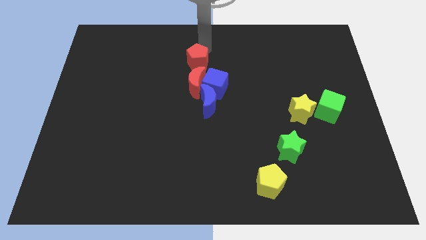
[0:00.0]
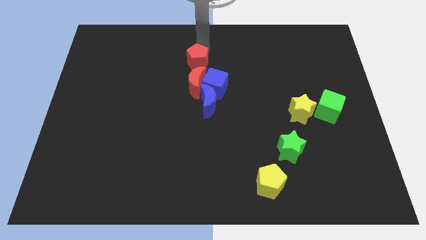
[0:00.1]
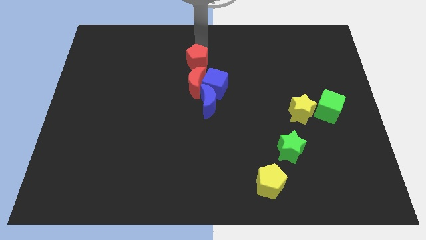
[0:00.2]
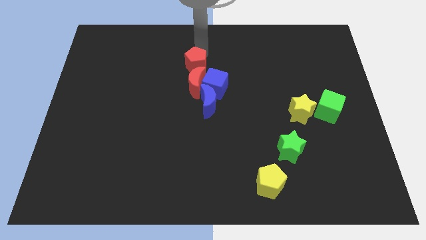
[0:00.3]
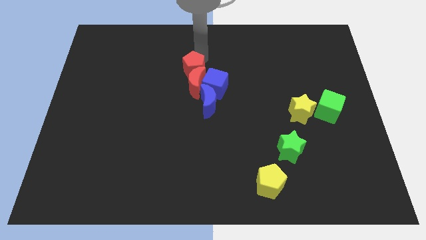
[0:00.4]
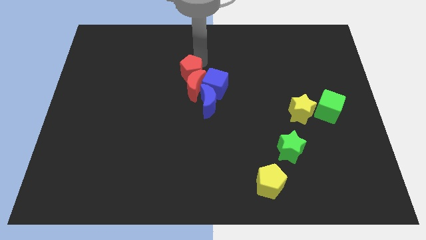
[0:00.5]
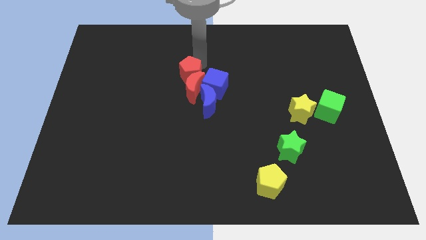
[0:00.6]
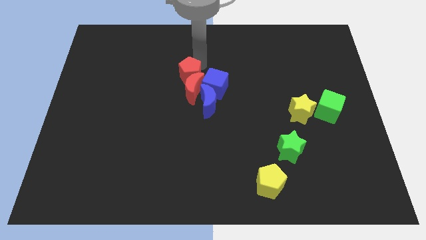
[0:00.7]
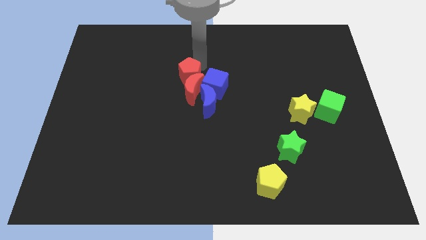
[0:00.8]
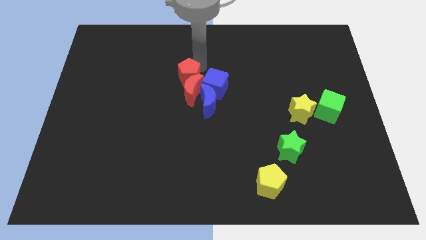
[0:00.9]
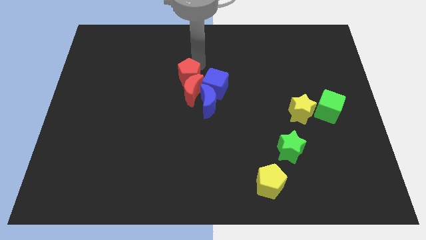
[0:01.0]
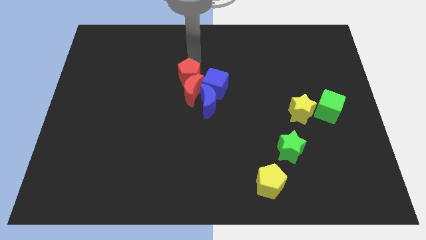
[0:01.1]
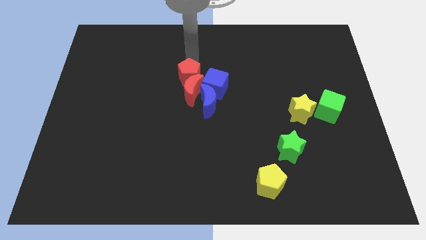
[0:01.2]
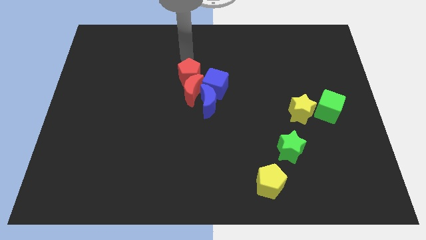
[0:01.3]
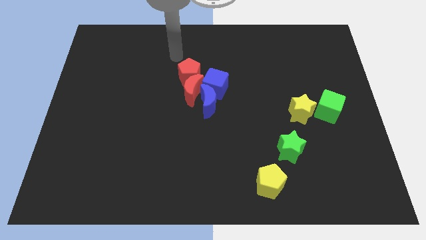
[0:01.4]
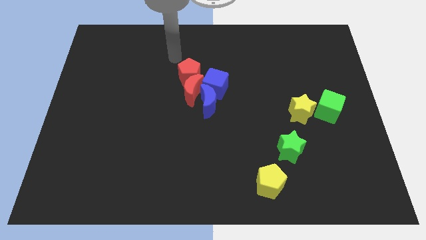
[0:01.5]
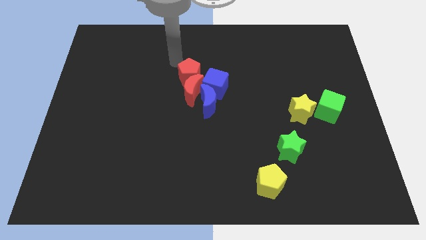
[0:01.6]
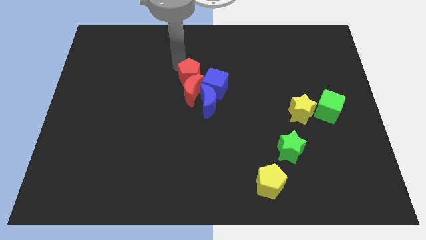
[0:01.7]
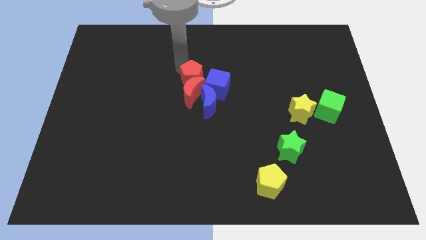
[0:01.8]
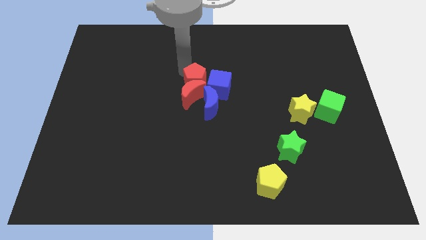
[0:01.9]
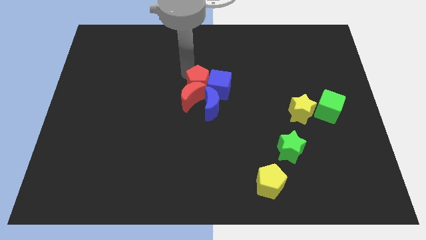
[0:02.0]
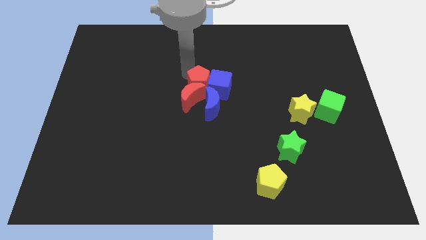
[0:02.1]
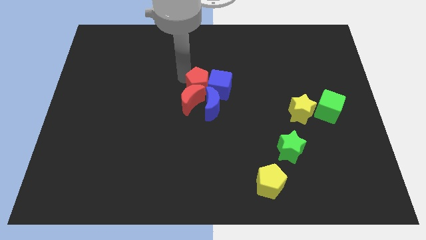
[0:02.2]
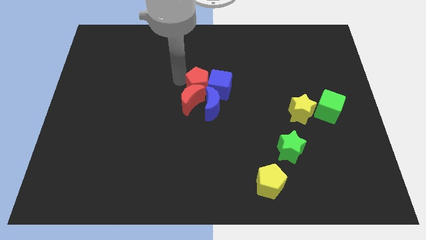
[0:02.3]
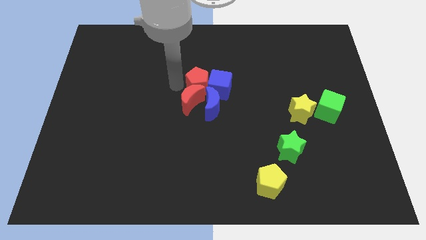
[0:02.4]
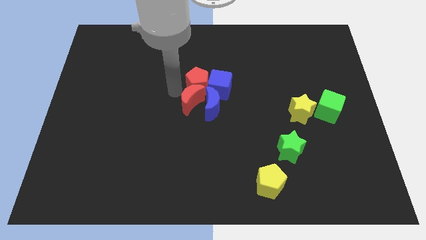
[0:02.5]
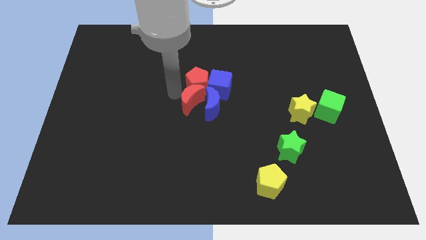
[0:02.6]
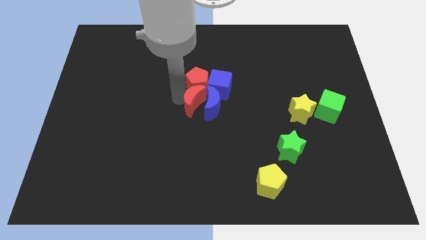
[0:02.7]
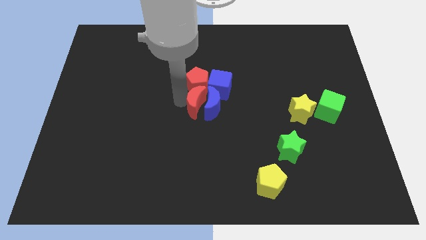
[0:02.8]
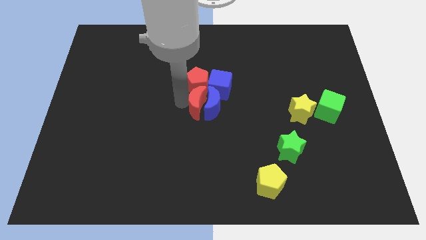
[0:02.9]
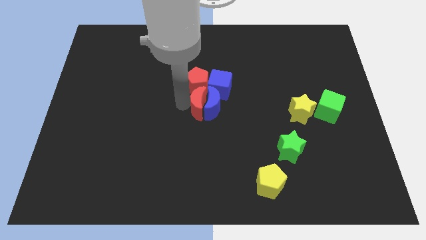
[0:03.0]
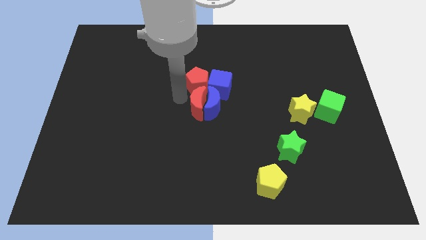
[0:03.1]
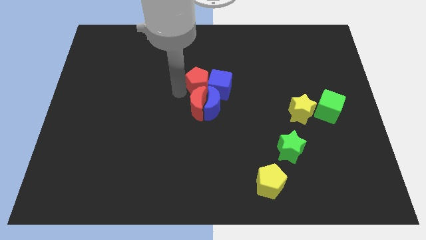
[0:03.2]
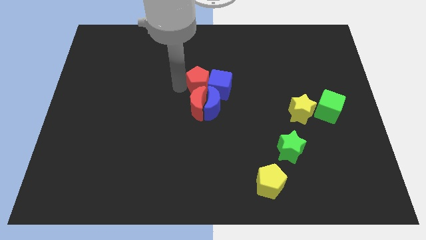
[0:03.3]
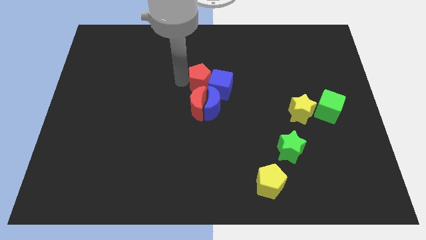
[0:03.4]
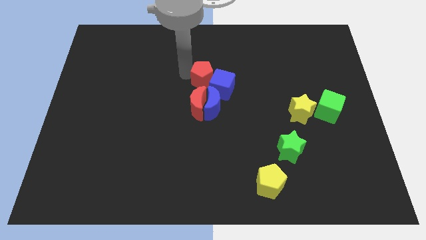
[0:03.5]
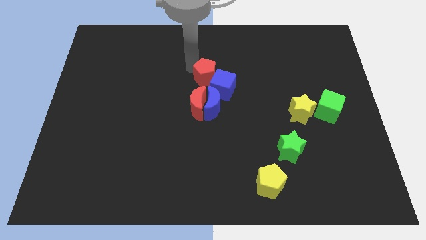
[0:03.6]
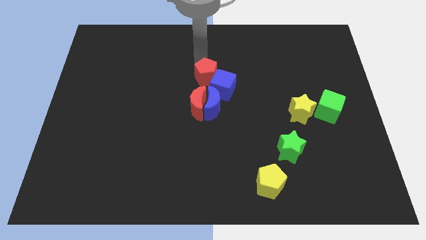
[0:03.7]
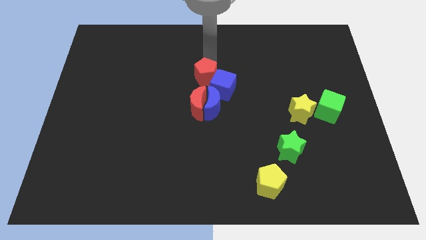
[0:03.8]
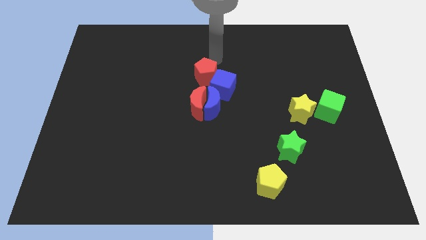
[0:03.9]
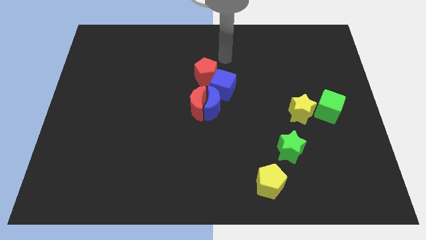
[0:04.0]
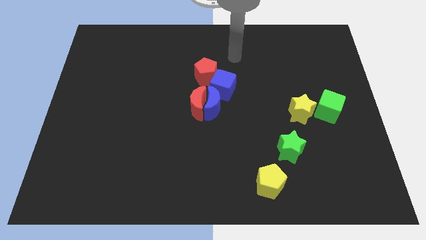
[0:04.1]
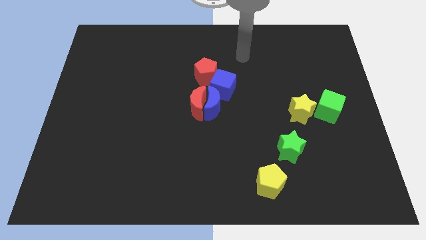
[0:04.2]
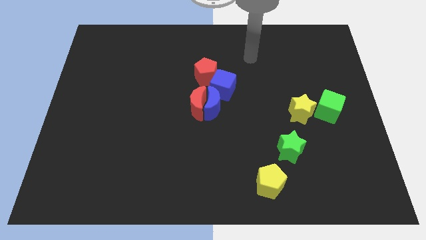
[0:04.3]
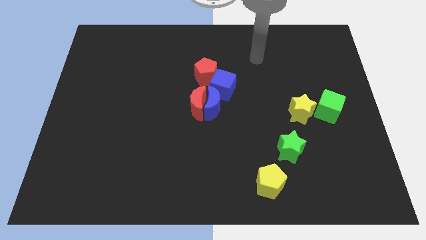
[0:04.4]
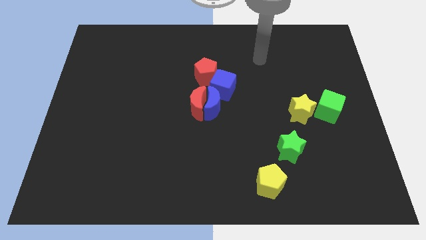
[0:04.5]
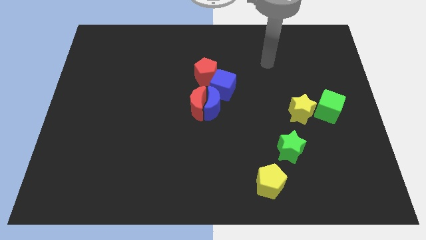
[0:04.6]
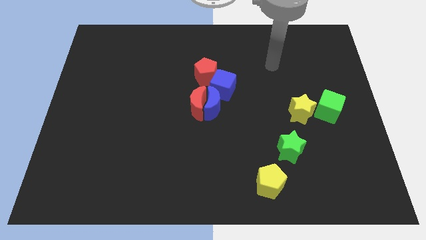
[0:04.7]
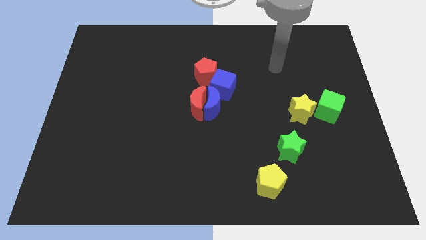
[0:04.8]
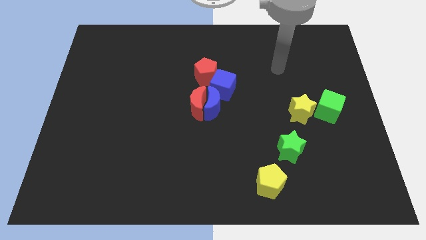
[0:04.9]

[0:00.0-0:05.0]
push the red pentagon into the group of blocks

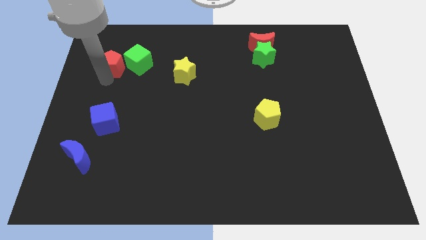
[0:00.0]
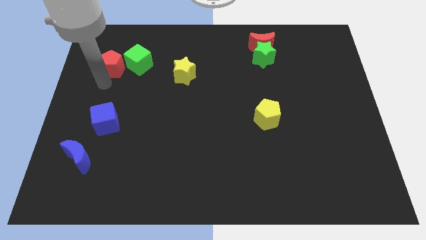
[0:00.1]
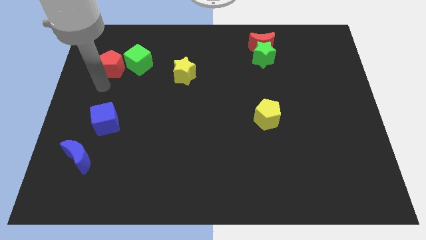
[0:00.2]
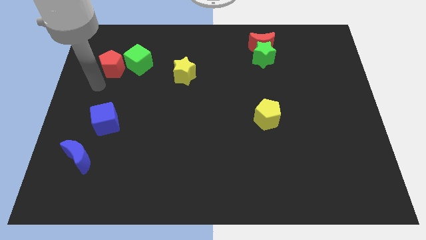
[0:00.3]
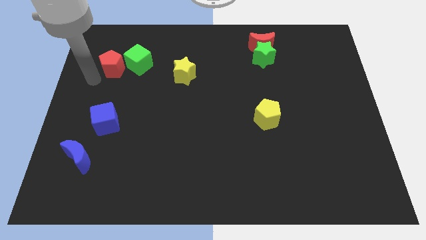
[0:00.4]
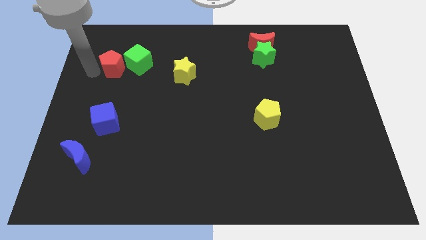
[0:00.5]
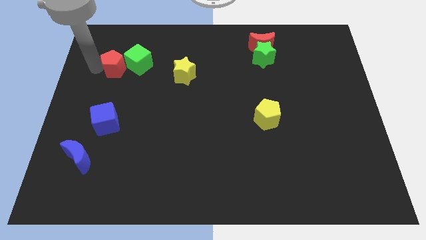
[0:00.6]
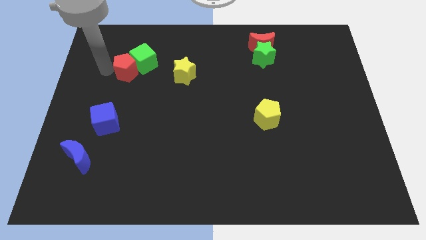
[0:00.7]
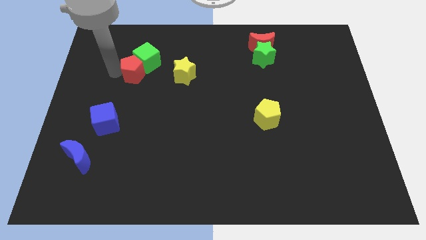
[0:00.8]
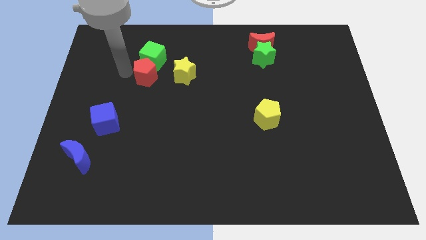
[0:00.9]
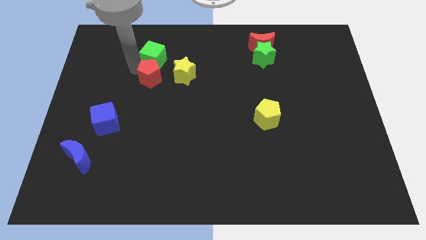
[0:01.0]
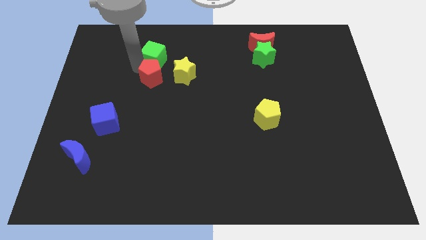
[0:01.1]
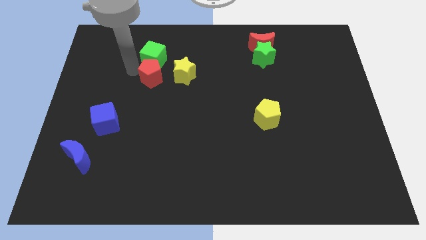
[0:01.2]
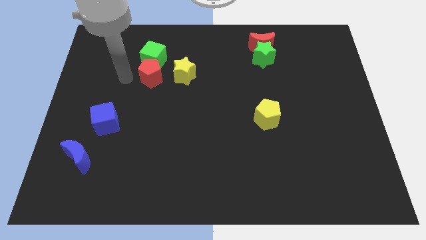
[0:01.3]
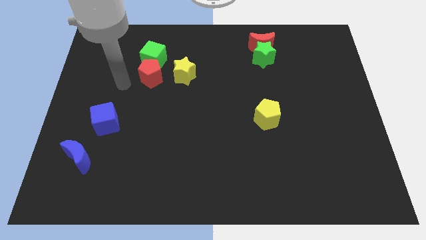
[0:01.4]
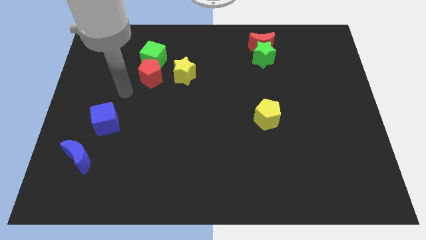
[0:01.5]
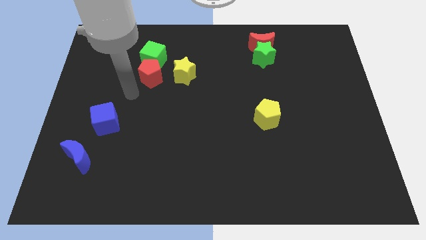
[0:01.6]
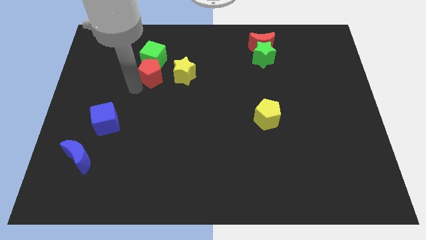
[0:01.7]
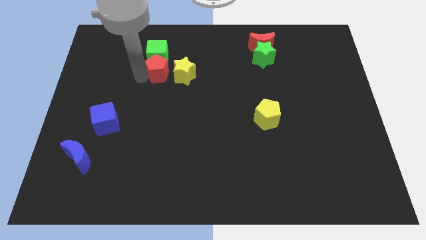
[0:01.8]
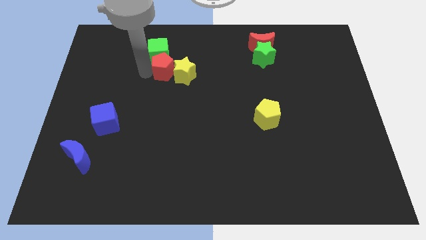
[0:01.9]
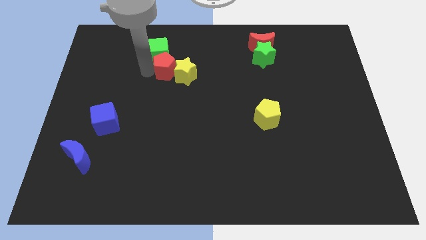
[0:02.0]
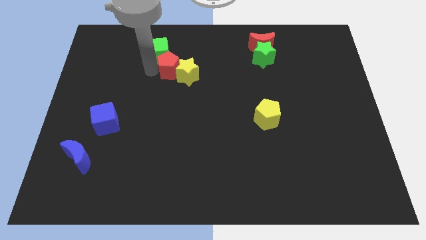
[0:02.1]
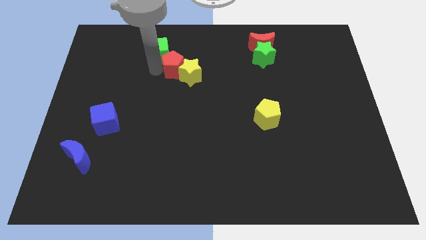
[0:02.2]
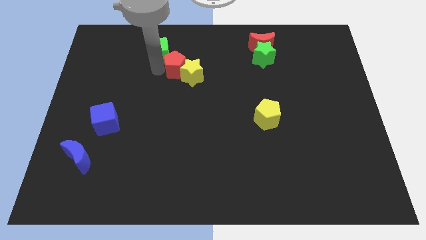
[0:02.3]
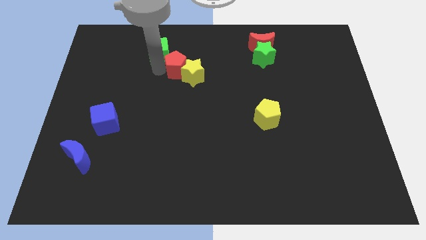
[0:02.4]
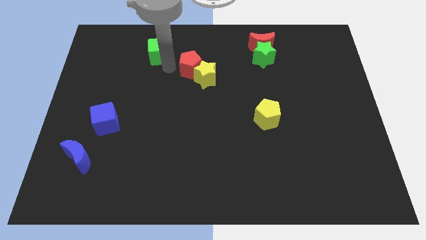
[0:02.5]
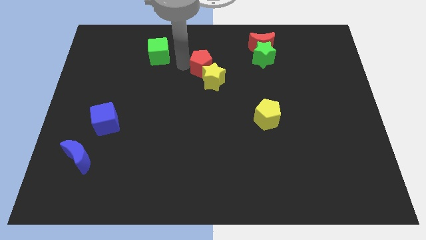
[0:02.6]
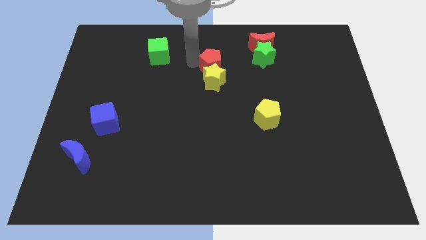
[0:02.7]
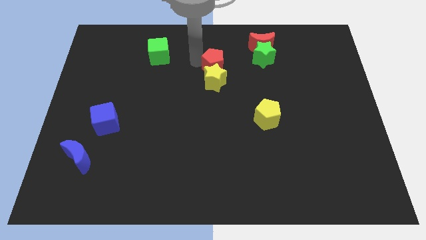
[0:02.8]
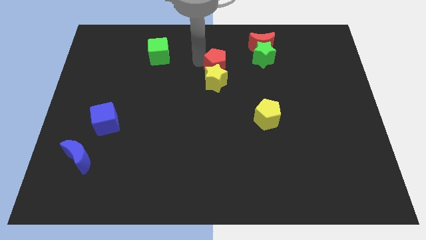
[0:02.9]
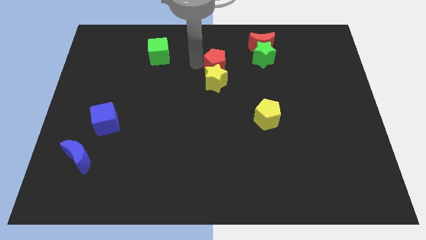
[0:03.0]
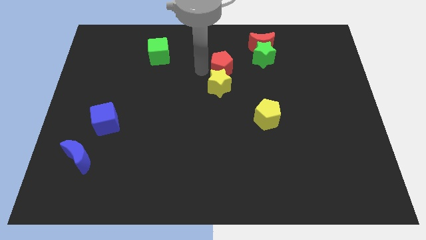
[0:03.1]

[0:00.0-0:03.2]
move red pentagon into the yellow star to the top center

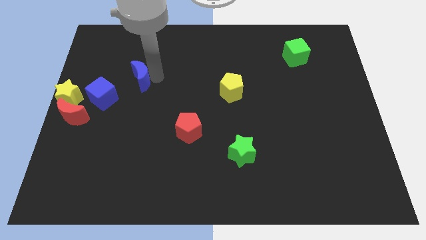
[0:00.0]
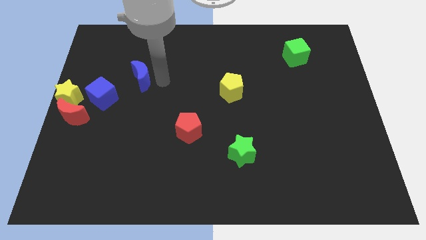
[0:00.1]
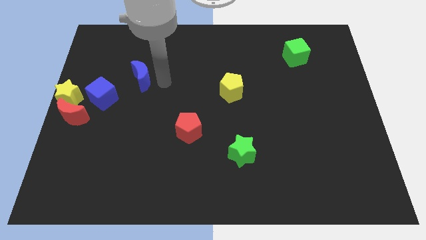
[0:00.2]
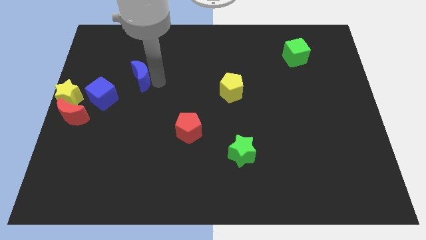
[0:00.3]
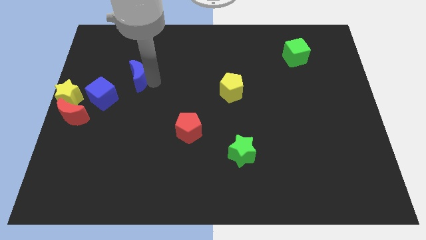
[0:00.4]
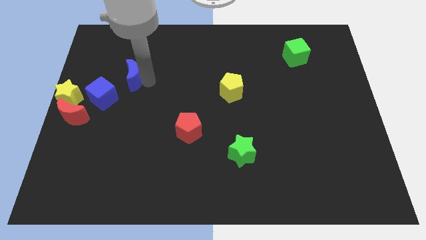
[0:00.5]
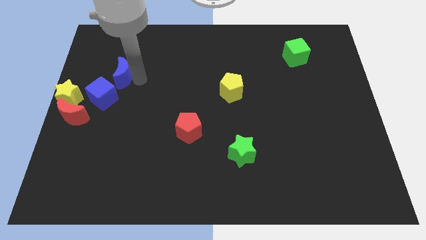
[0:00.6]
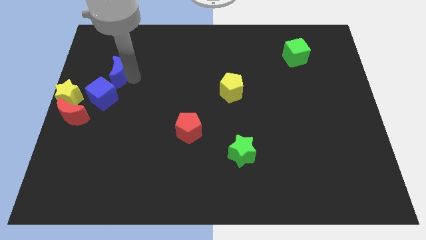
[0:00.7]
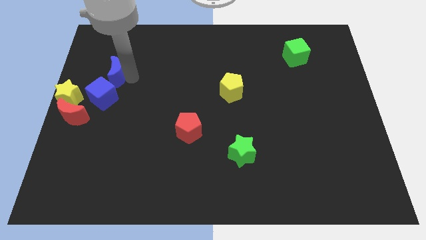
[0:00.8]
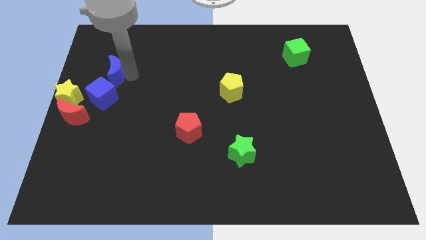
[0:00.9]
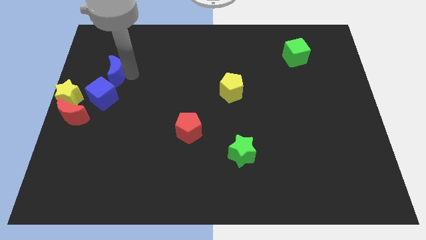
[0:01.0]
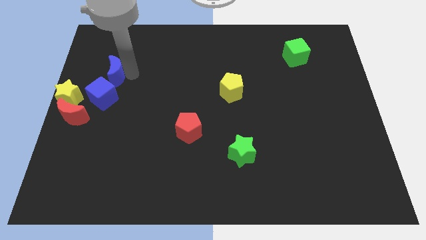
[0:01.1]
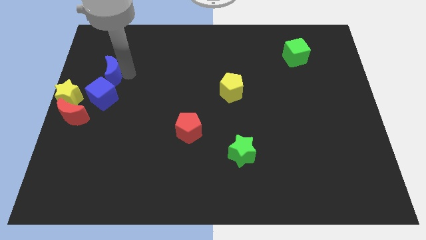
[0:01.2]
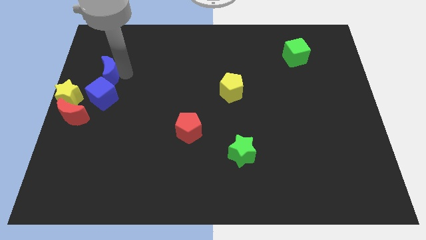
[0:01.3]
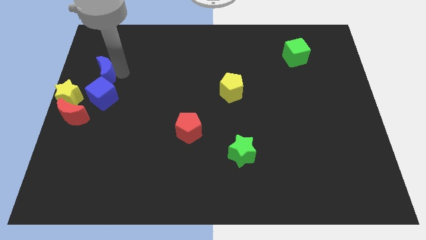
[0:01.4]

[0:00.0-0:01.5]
drag the blue moon above the blue cube
